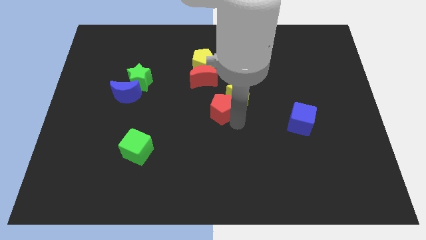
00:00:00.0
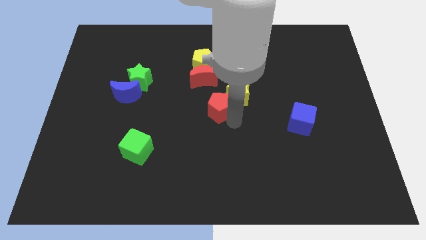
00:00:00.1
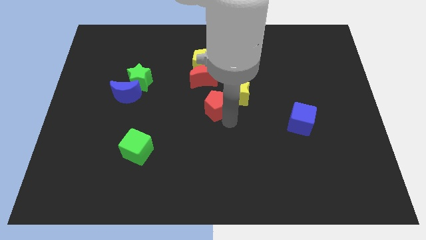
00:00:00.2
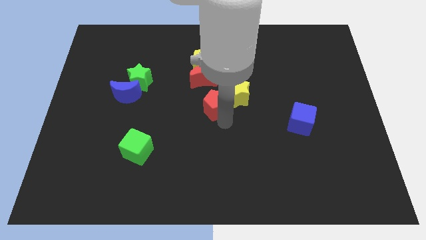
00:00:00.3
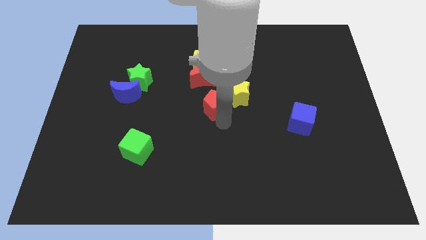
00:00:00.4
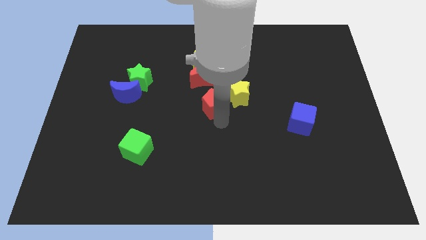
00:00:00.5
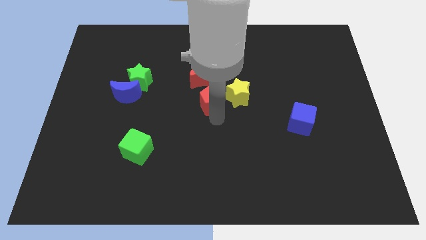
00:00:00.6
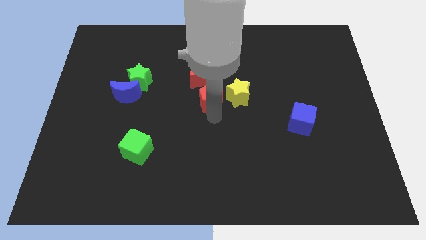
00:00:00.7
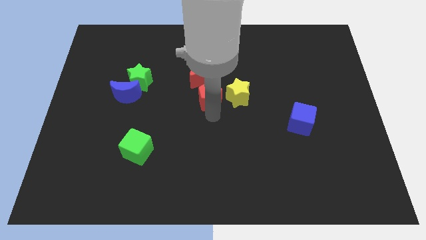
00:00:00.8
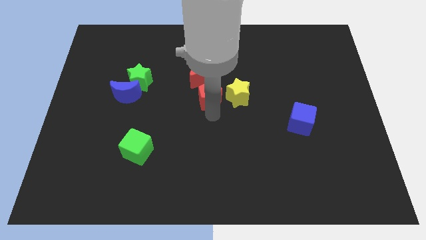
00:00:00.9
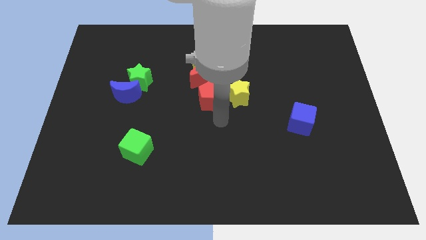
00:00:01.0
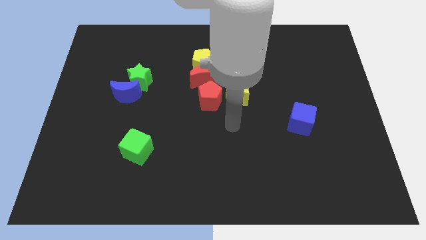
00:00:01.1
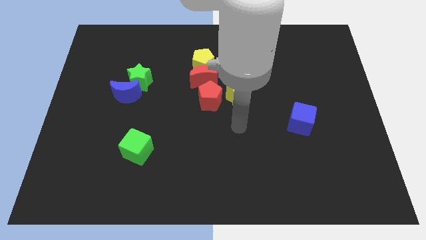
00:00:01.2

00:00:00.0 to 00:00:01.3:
place the red pentagon below the red crescent to form a vertical line

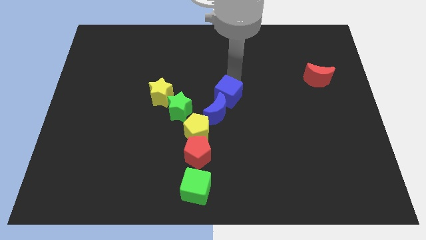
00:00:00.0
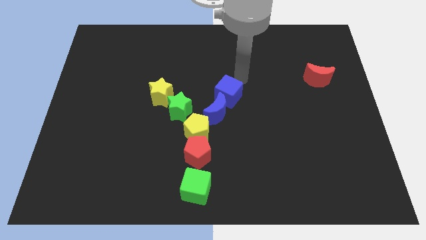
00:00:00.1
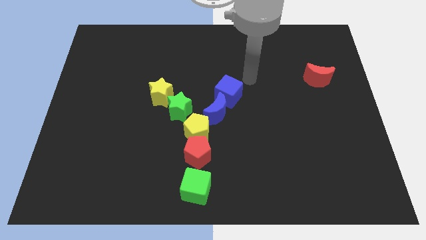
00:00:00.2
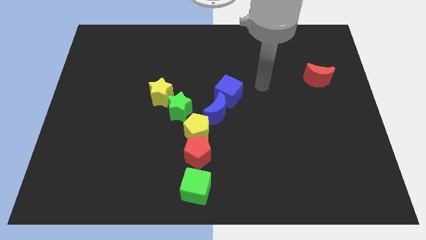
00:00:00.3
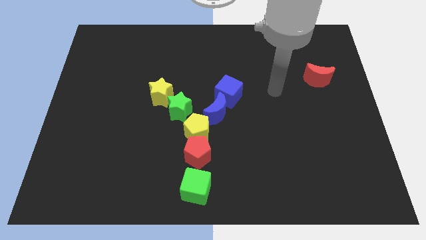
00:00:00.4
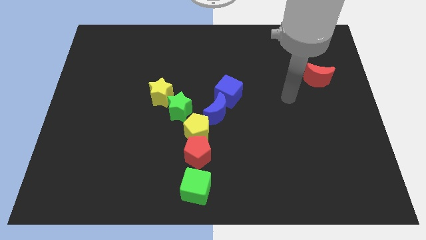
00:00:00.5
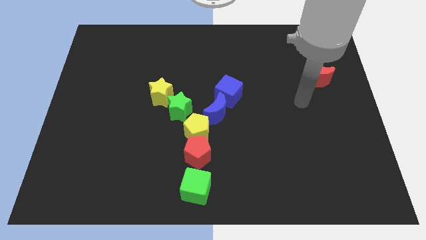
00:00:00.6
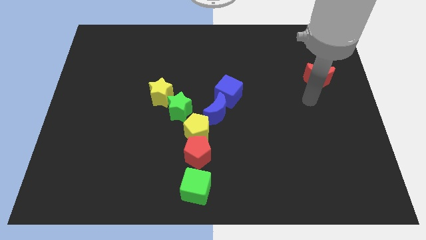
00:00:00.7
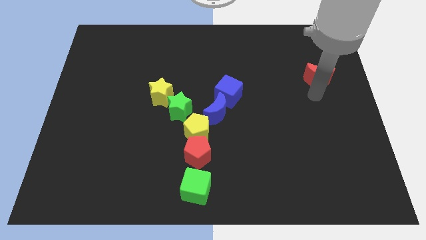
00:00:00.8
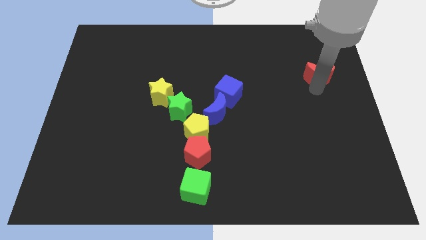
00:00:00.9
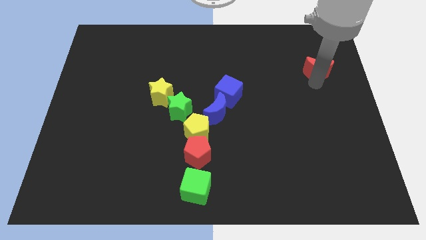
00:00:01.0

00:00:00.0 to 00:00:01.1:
tap the bottom side of red moon

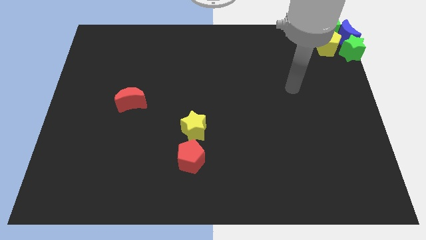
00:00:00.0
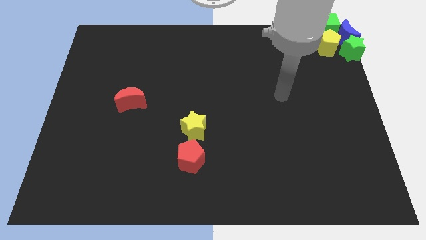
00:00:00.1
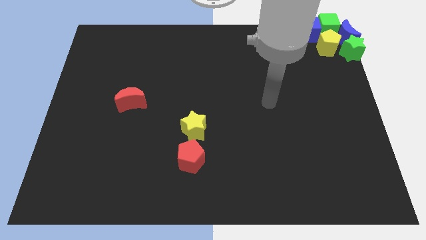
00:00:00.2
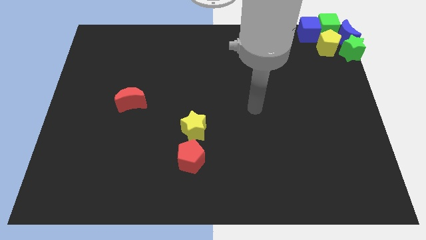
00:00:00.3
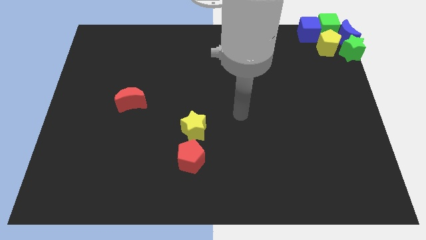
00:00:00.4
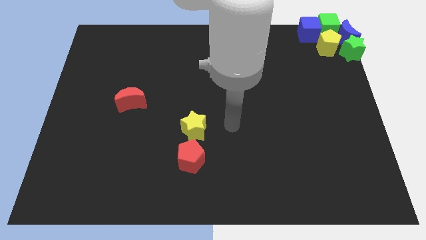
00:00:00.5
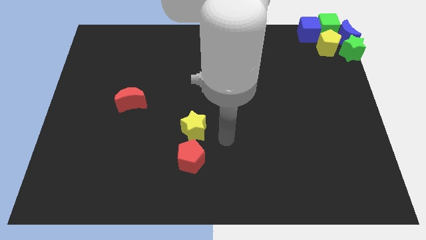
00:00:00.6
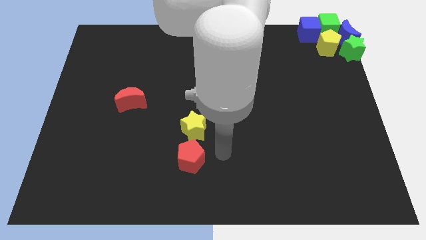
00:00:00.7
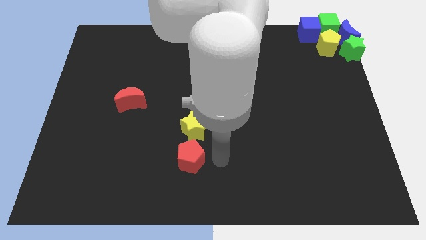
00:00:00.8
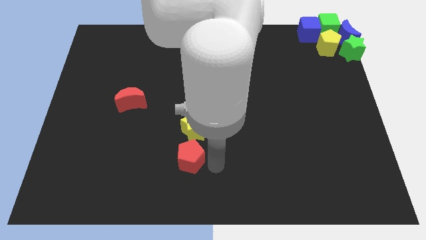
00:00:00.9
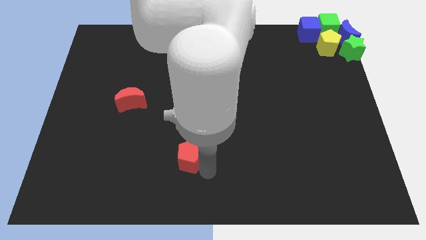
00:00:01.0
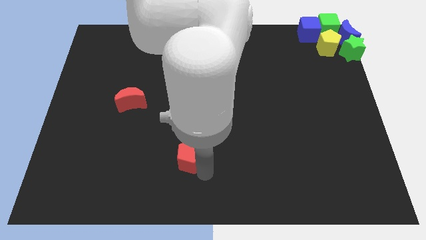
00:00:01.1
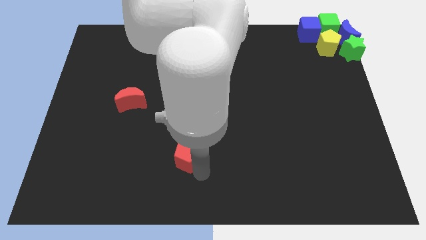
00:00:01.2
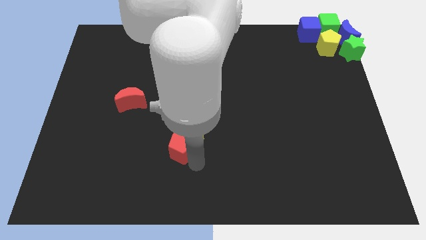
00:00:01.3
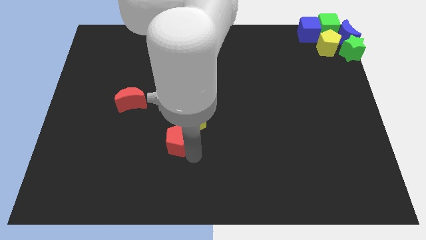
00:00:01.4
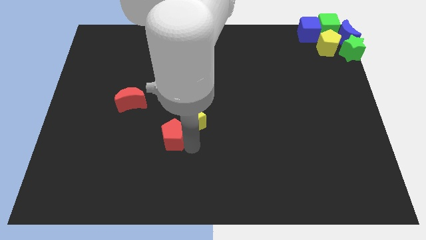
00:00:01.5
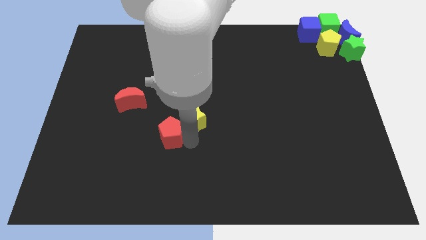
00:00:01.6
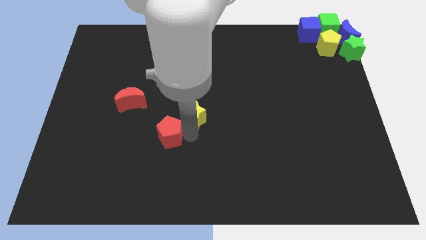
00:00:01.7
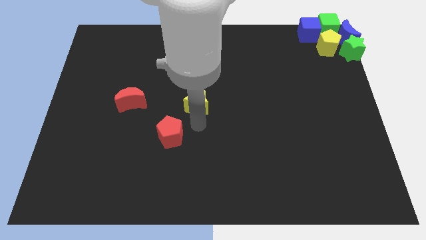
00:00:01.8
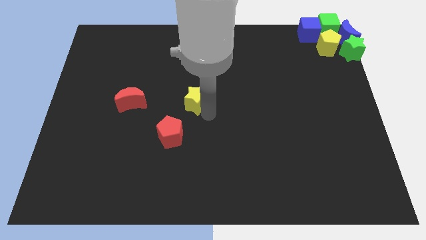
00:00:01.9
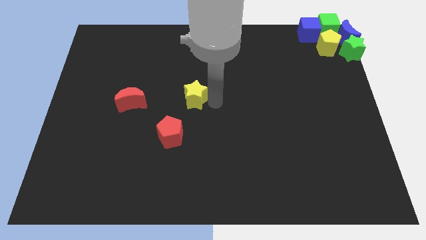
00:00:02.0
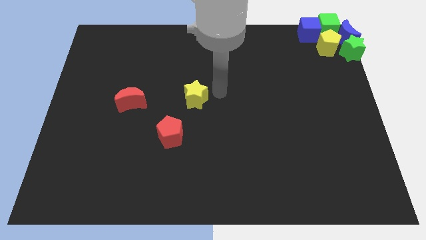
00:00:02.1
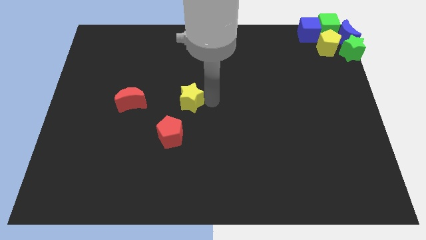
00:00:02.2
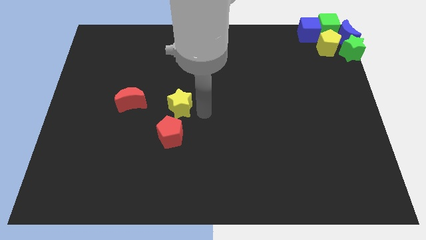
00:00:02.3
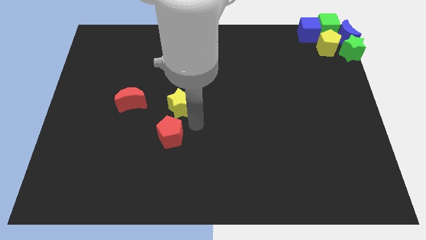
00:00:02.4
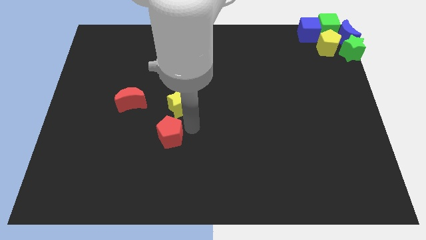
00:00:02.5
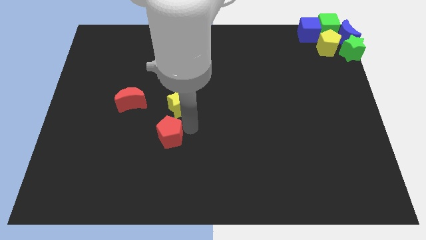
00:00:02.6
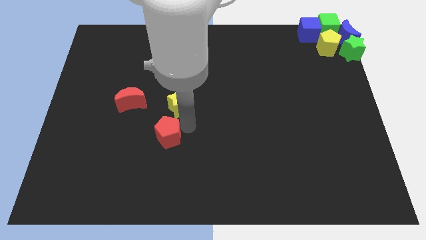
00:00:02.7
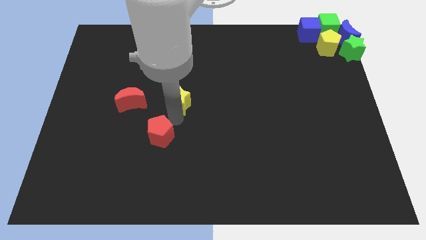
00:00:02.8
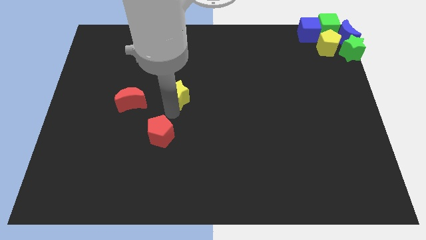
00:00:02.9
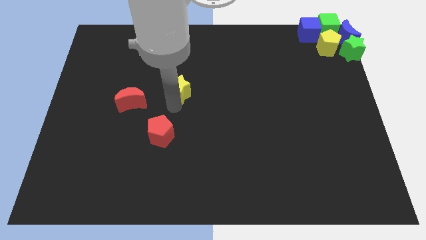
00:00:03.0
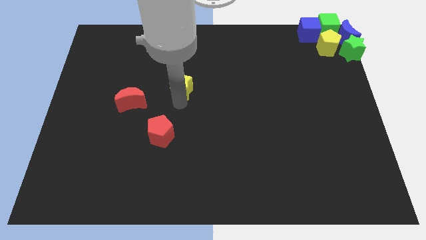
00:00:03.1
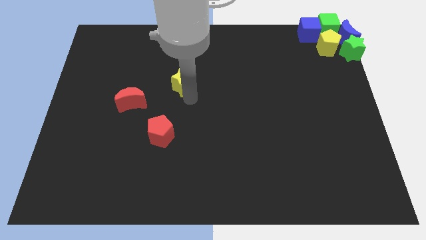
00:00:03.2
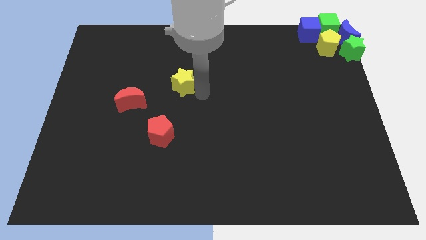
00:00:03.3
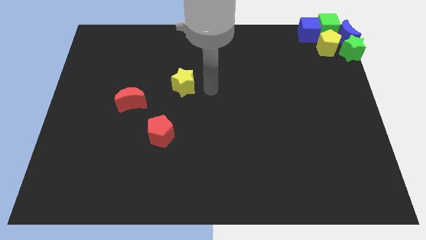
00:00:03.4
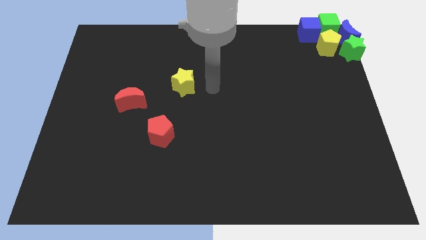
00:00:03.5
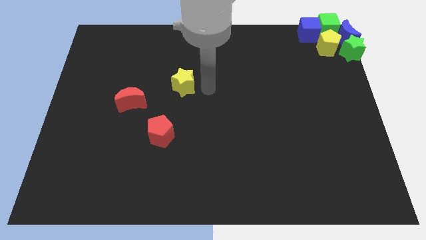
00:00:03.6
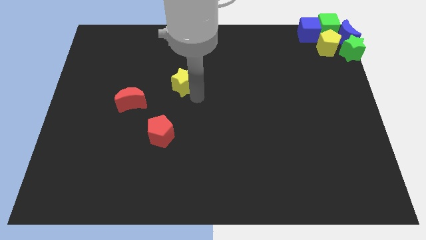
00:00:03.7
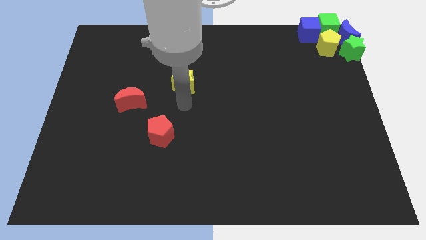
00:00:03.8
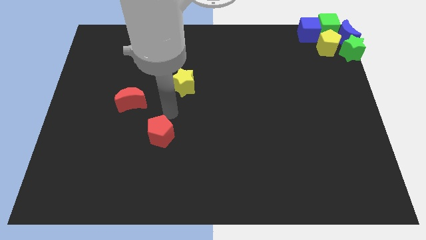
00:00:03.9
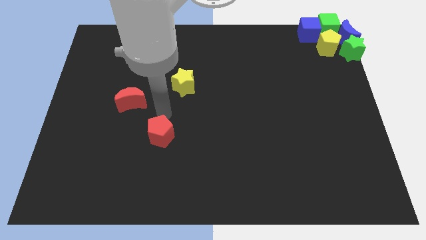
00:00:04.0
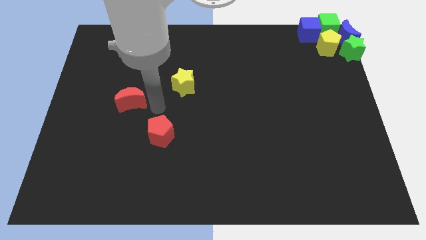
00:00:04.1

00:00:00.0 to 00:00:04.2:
place the yellow star diagonally on the top right side of the red crescent

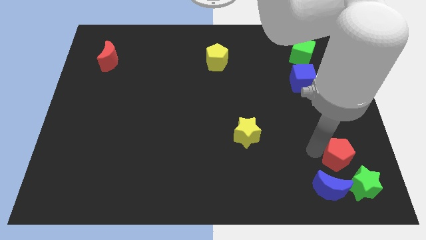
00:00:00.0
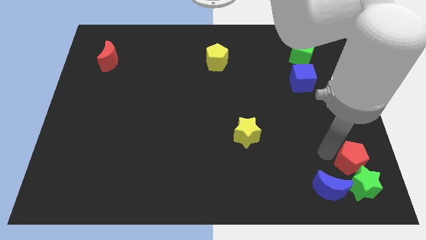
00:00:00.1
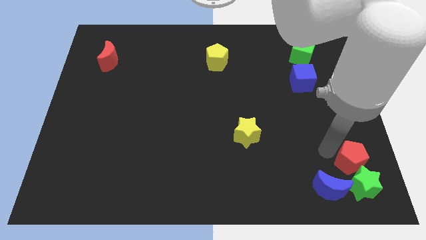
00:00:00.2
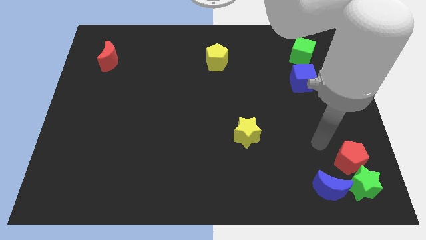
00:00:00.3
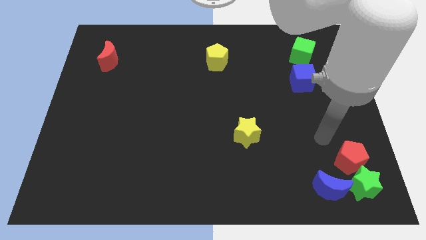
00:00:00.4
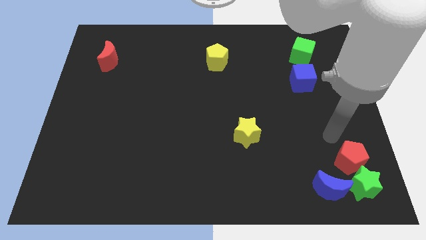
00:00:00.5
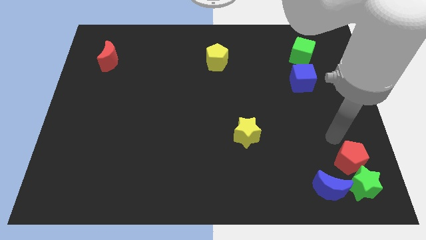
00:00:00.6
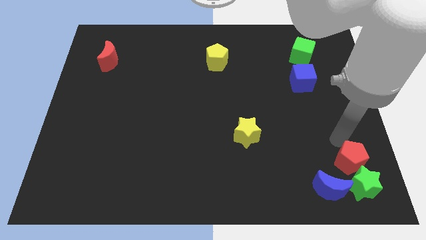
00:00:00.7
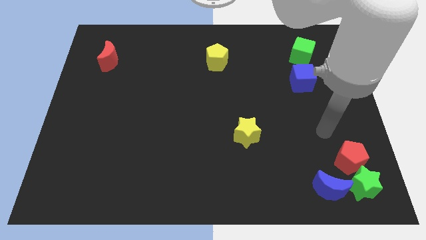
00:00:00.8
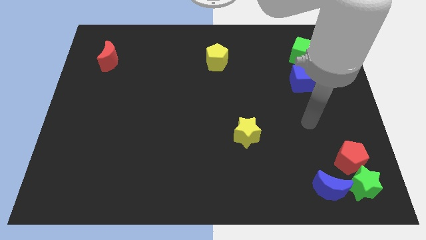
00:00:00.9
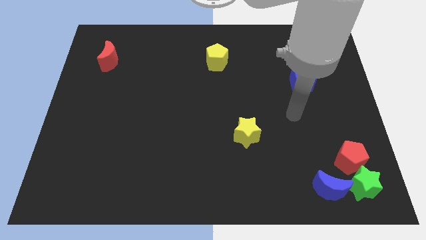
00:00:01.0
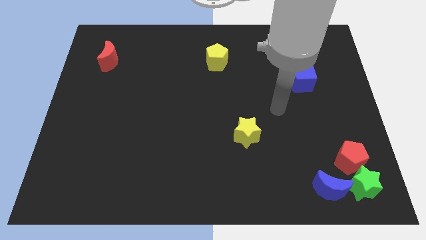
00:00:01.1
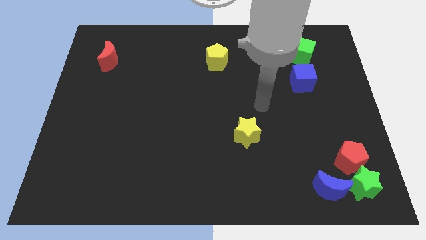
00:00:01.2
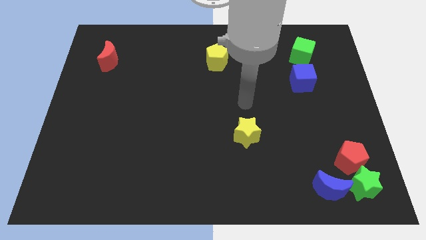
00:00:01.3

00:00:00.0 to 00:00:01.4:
move the red pentagon above the green star

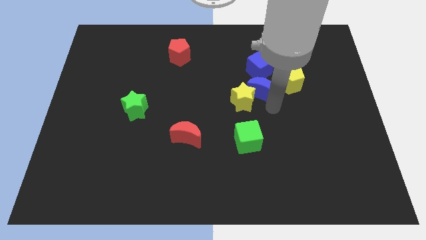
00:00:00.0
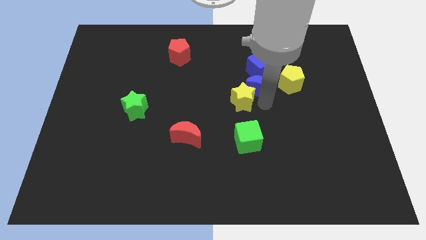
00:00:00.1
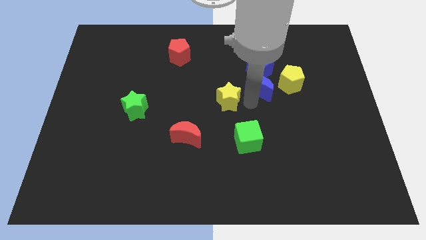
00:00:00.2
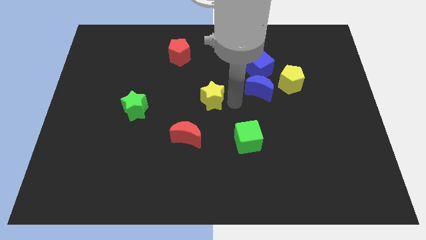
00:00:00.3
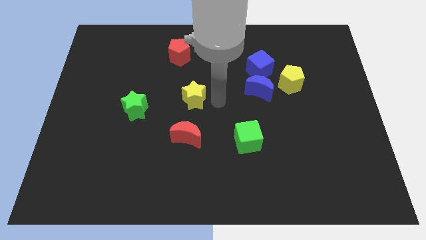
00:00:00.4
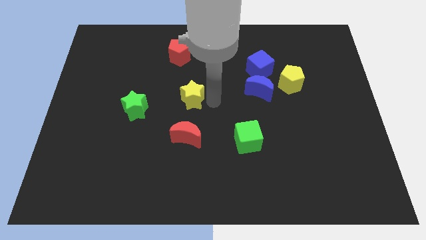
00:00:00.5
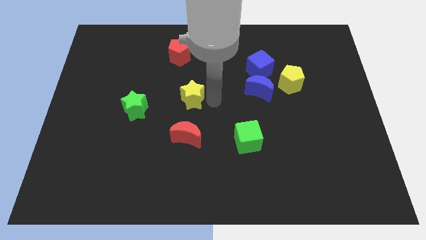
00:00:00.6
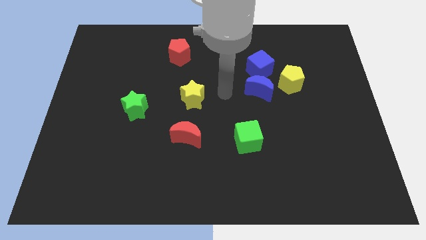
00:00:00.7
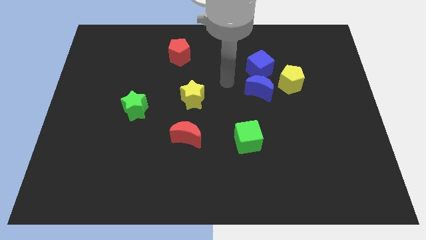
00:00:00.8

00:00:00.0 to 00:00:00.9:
put the yellow star below the red pentagon
